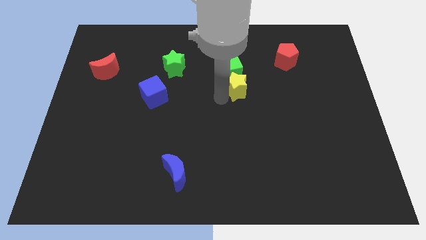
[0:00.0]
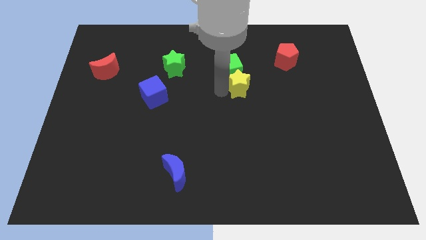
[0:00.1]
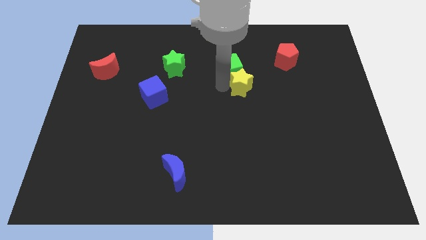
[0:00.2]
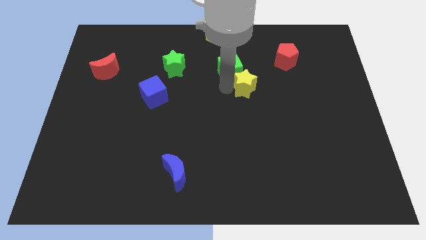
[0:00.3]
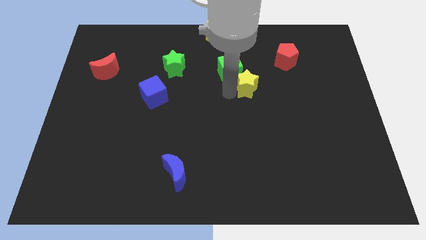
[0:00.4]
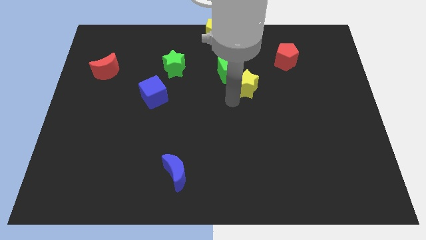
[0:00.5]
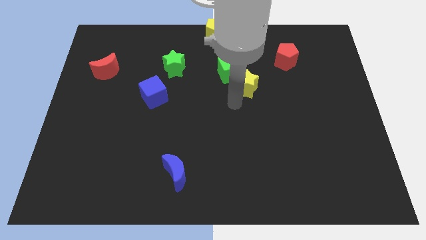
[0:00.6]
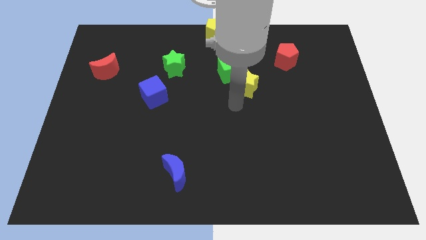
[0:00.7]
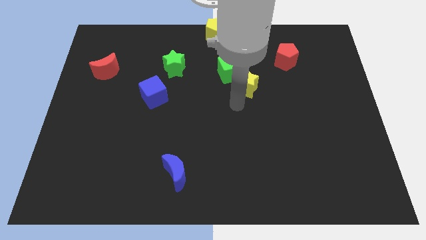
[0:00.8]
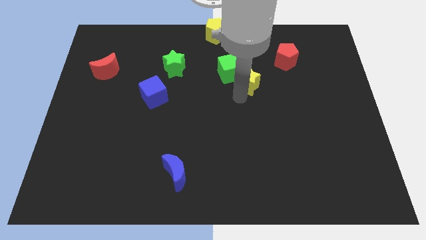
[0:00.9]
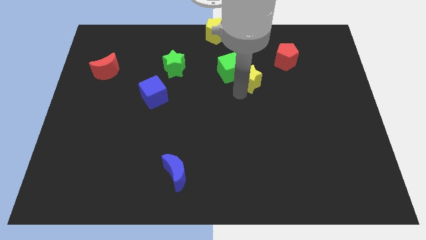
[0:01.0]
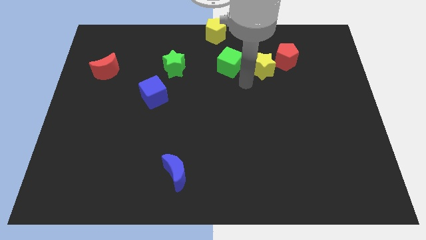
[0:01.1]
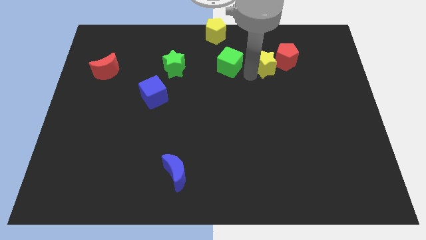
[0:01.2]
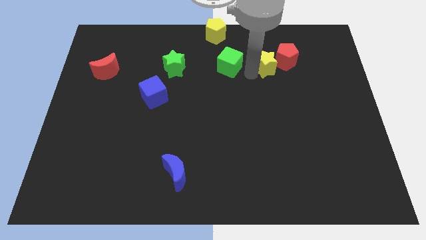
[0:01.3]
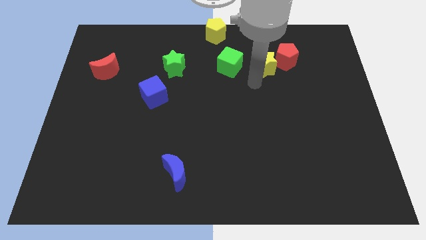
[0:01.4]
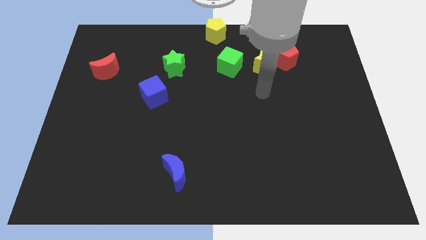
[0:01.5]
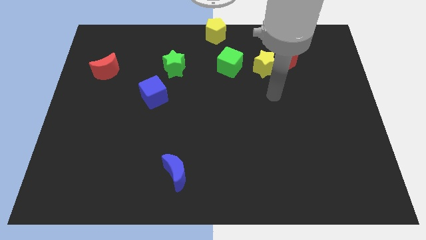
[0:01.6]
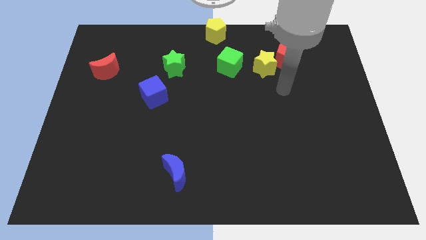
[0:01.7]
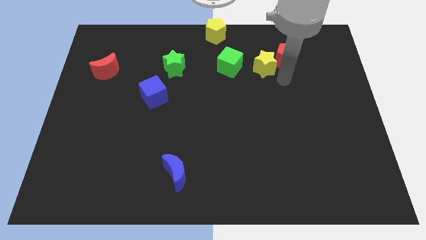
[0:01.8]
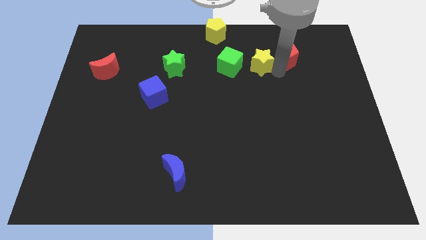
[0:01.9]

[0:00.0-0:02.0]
move the yellow star in between the green cube and red pentagon

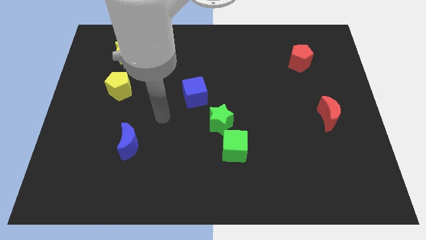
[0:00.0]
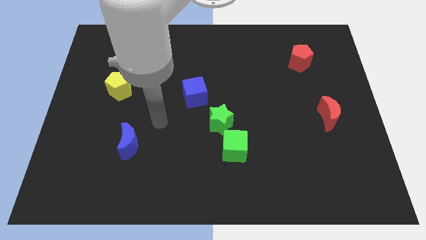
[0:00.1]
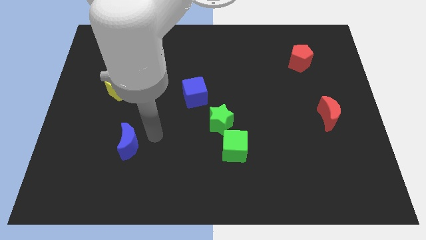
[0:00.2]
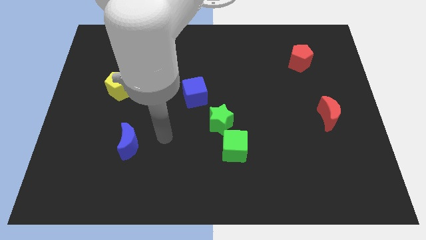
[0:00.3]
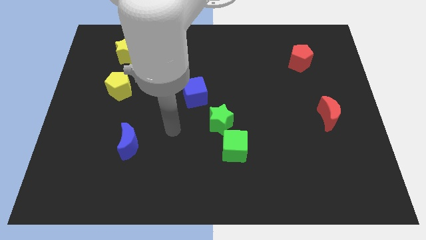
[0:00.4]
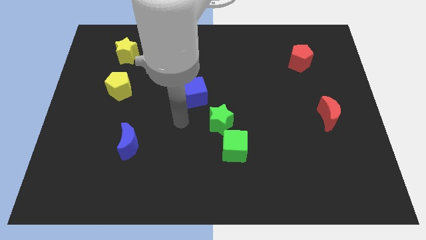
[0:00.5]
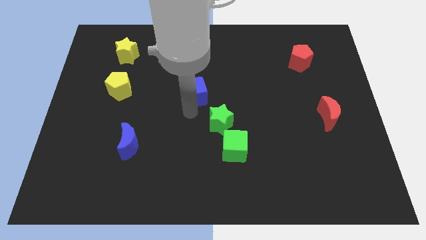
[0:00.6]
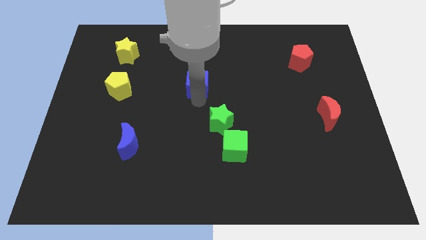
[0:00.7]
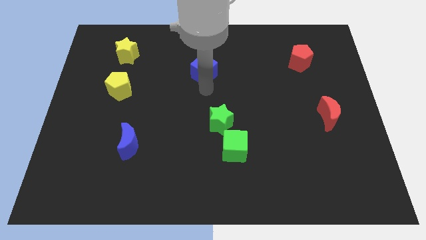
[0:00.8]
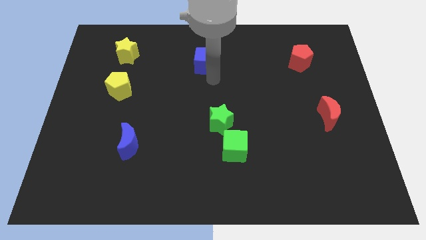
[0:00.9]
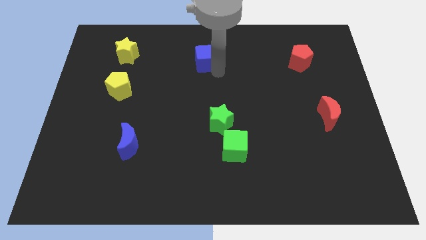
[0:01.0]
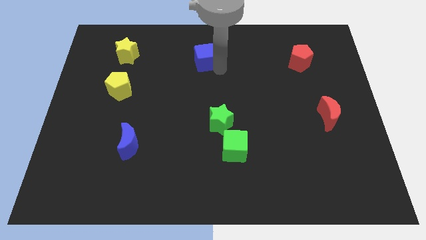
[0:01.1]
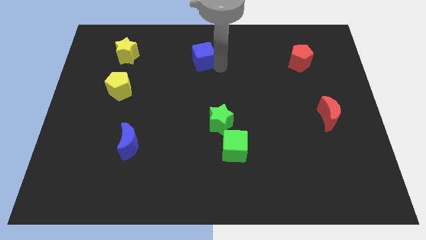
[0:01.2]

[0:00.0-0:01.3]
push the blue cube to the top side of the board

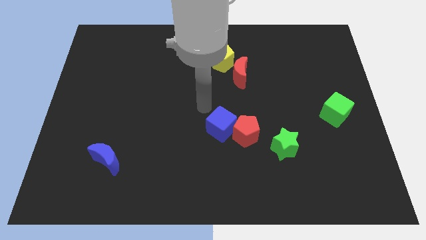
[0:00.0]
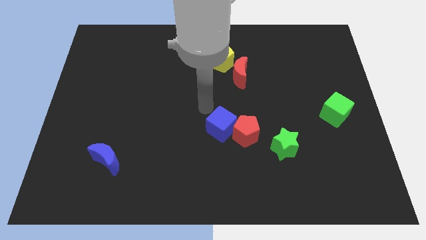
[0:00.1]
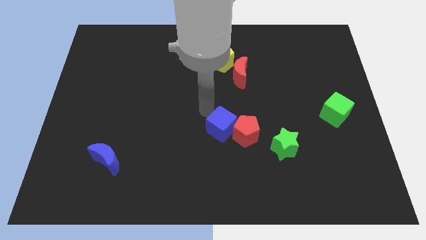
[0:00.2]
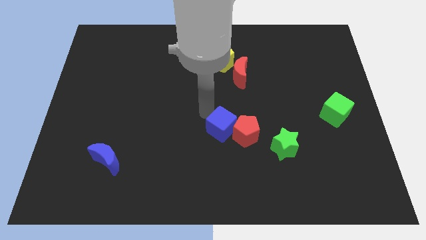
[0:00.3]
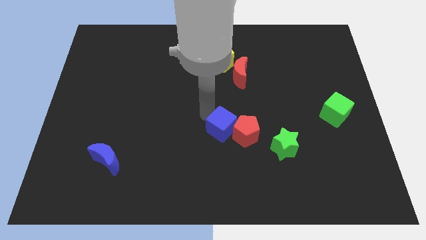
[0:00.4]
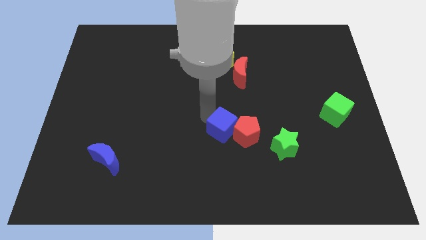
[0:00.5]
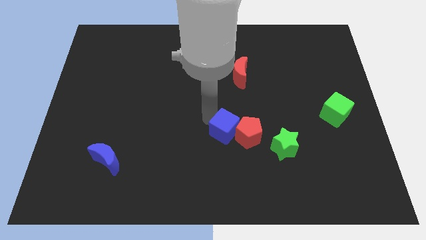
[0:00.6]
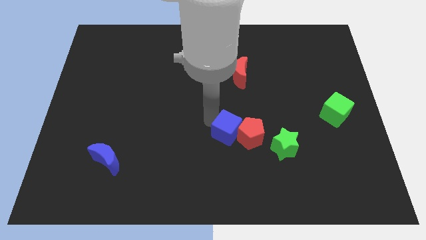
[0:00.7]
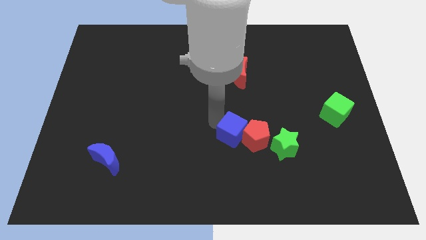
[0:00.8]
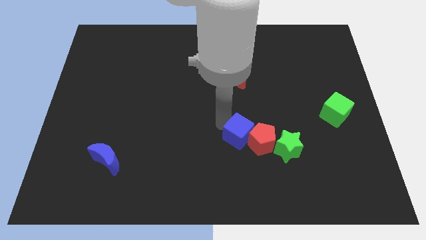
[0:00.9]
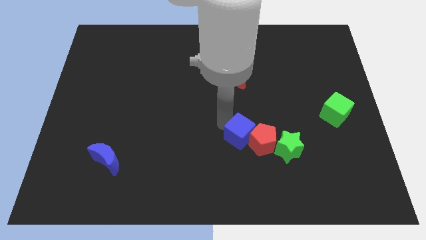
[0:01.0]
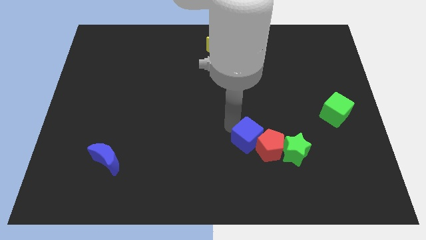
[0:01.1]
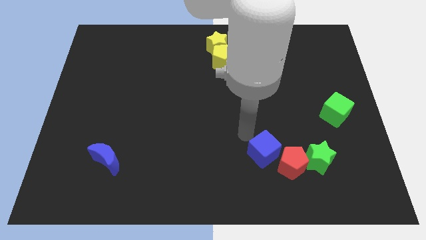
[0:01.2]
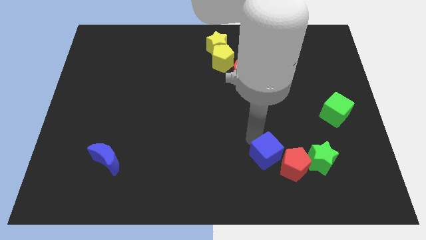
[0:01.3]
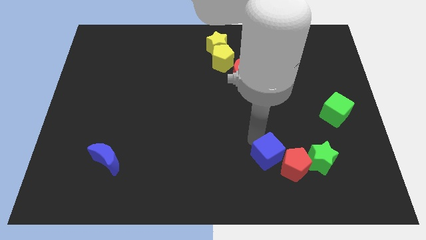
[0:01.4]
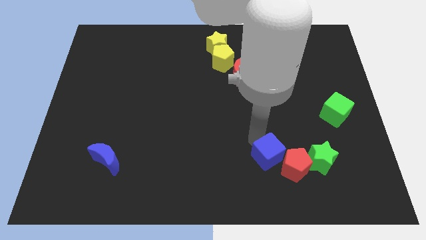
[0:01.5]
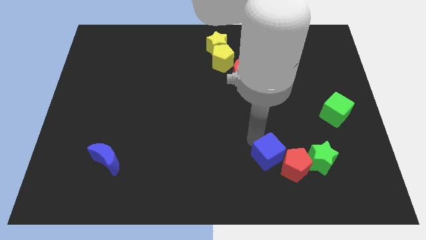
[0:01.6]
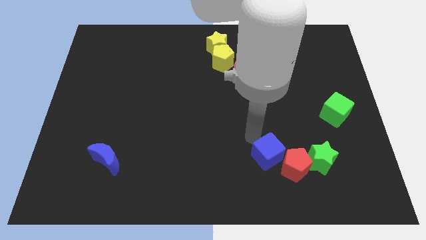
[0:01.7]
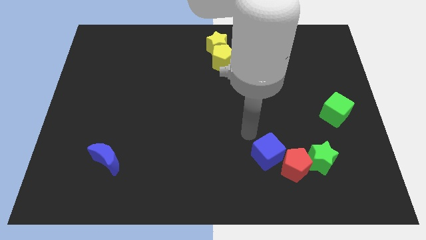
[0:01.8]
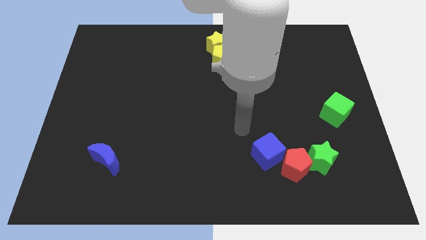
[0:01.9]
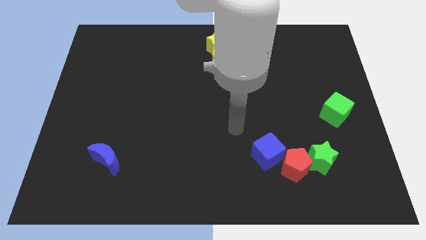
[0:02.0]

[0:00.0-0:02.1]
move the green star red pentagon with the blue cube
